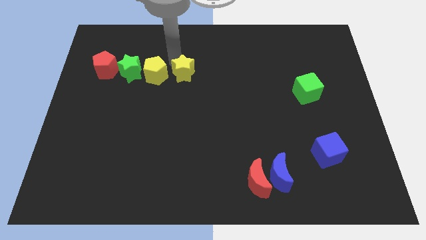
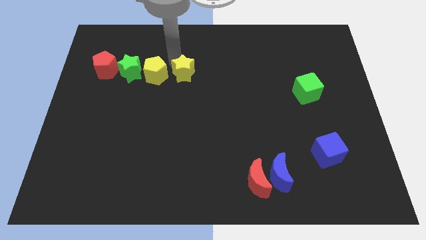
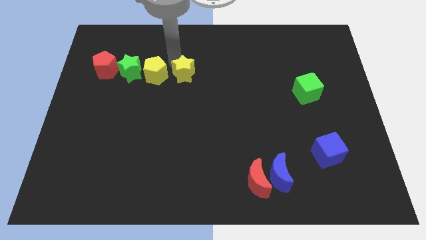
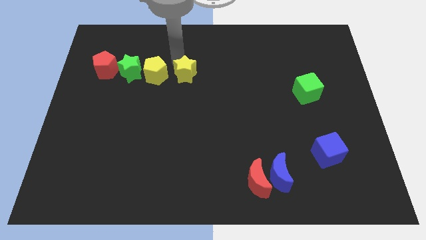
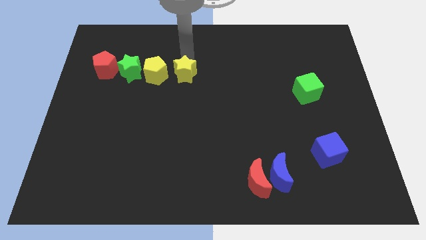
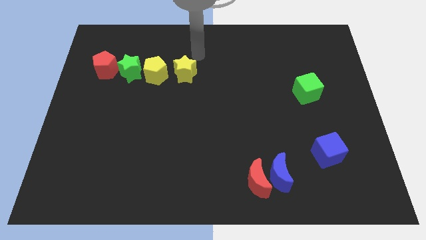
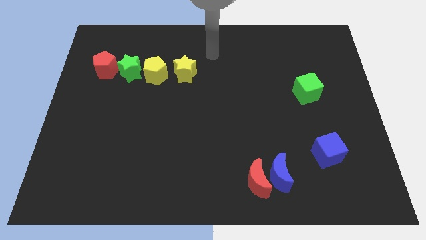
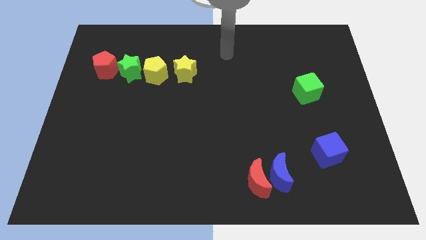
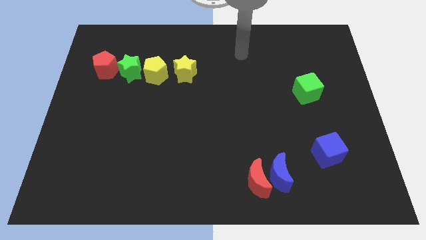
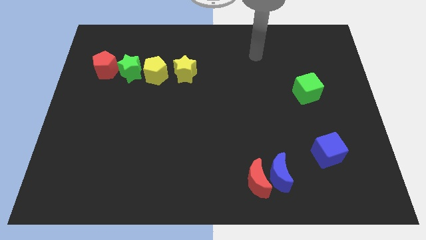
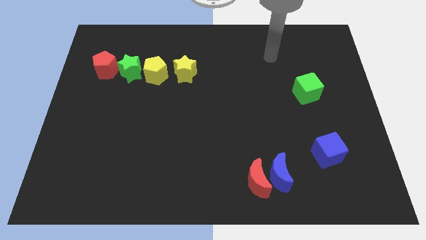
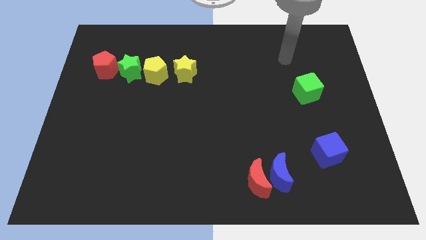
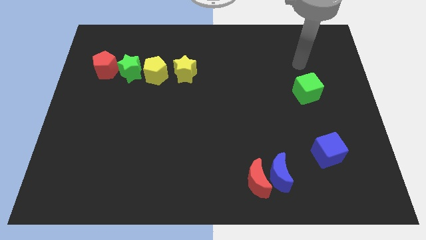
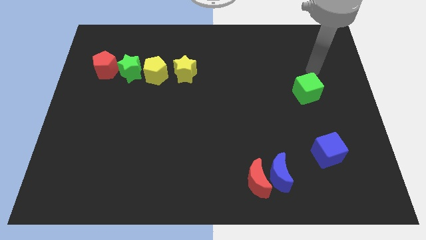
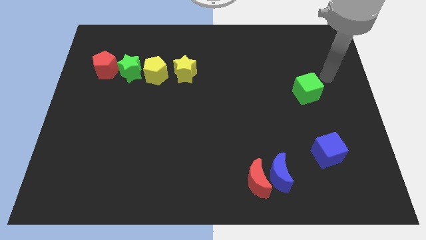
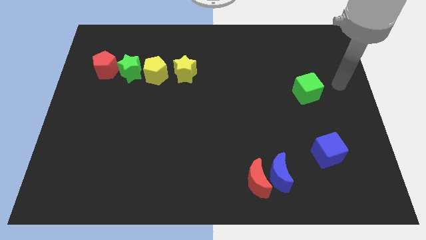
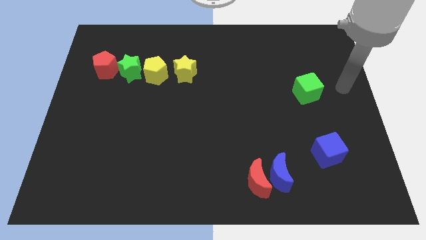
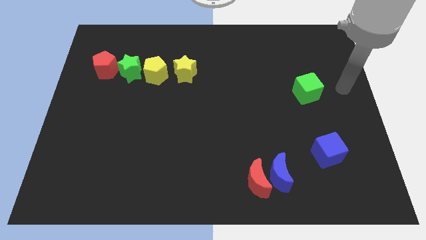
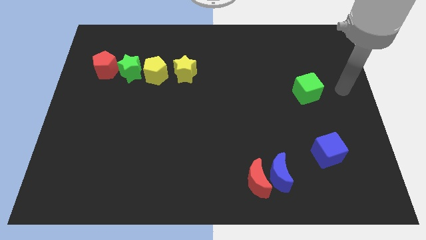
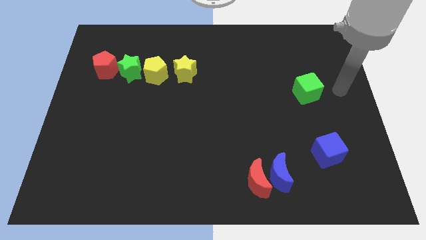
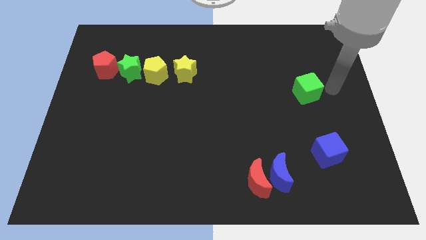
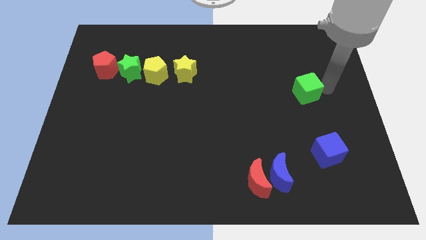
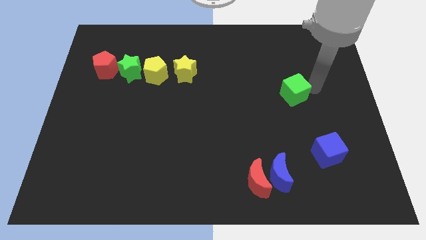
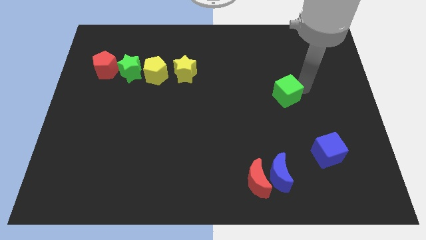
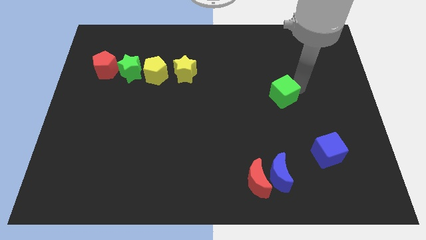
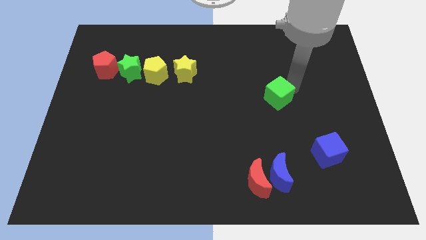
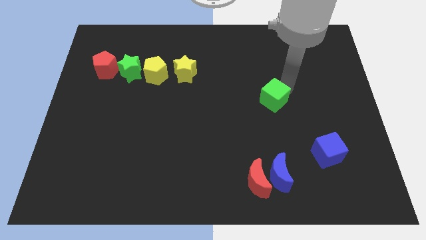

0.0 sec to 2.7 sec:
push green cube above blue crescent

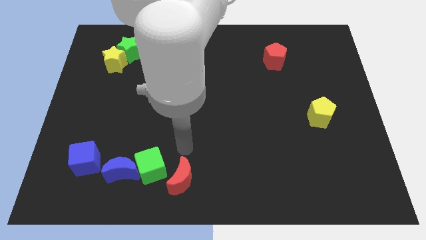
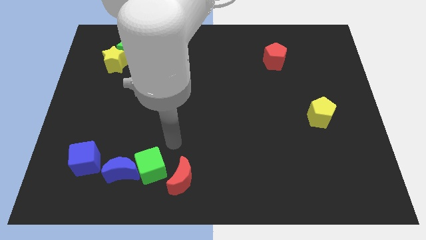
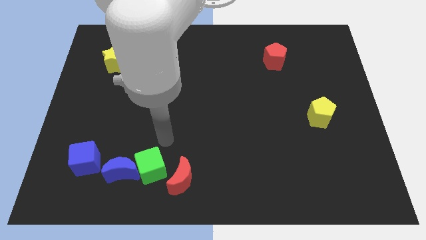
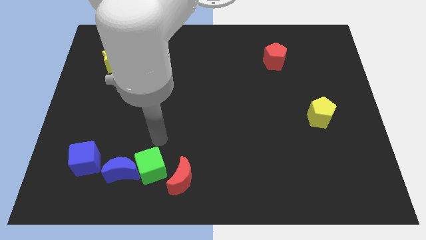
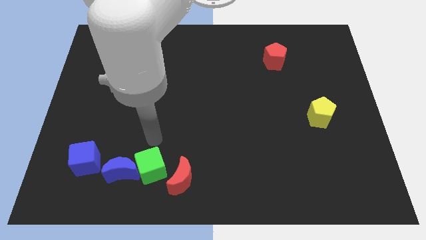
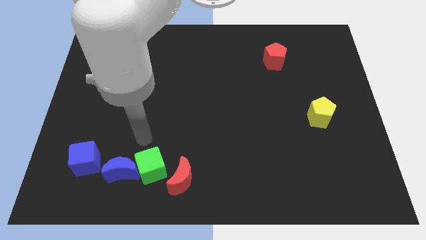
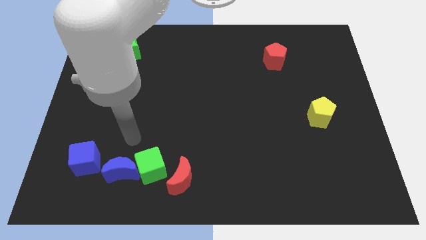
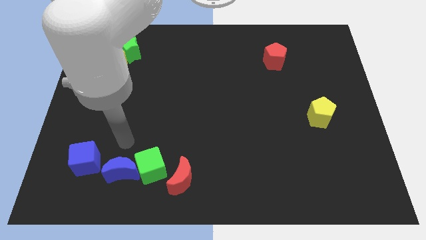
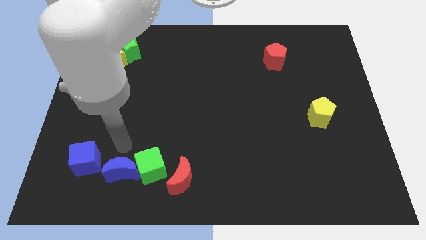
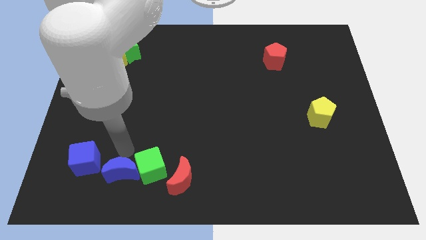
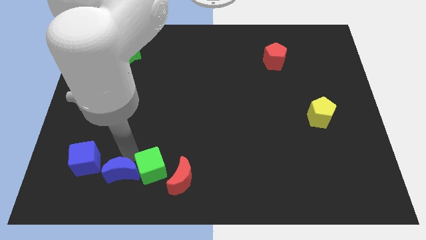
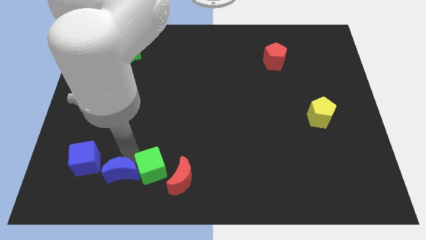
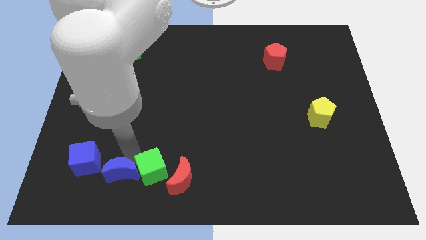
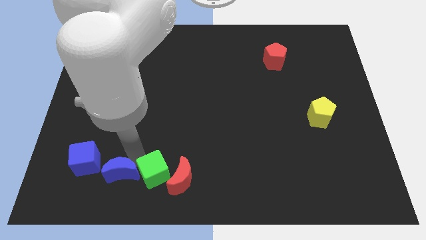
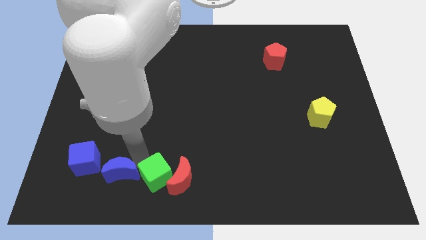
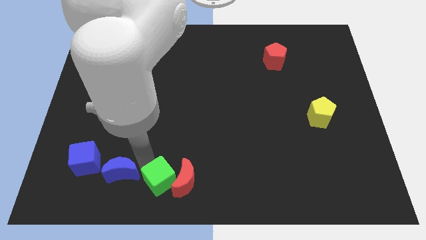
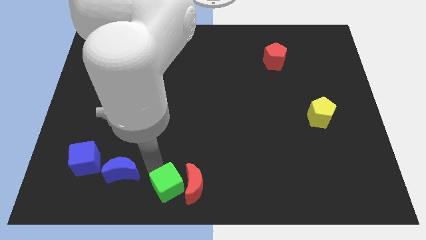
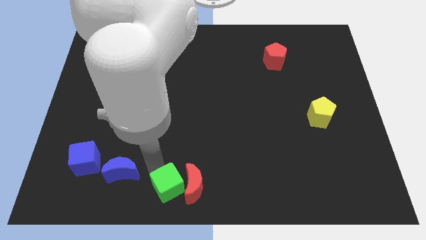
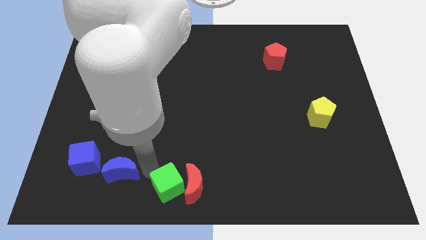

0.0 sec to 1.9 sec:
push the green cube into the red moon

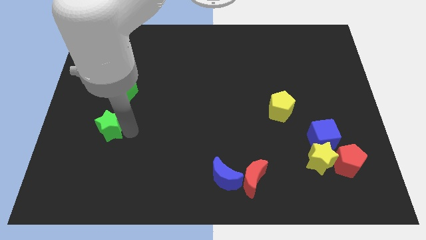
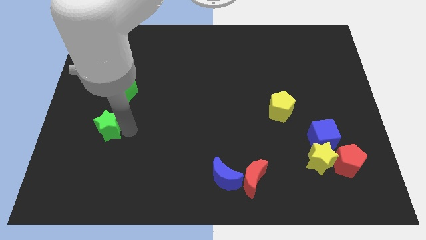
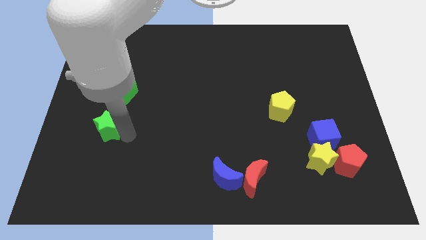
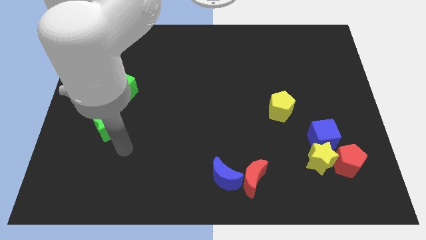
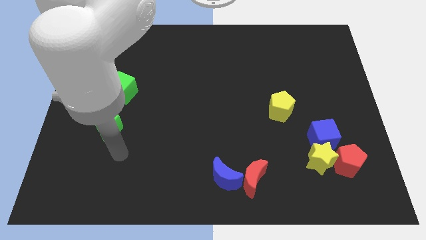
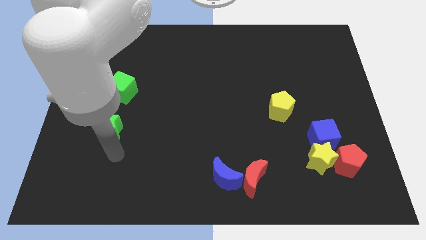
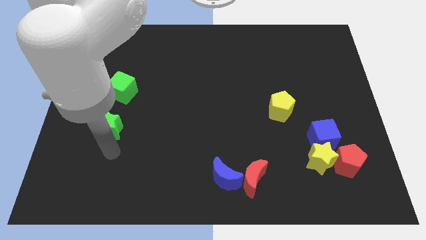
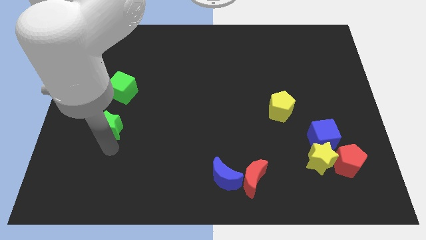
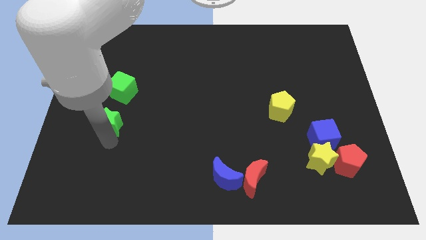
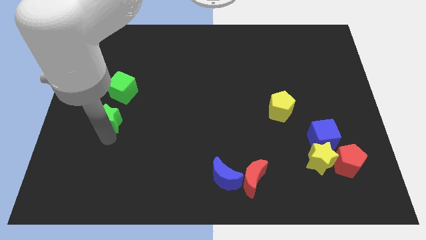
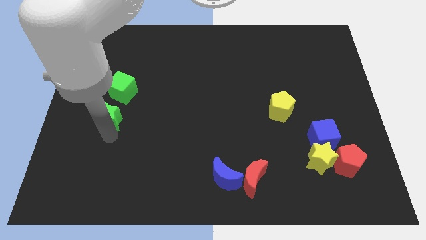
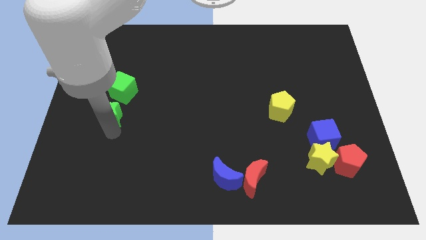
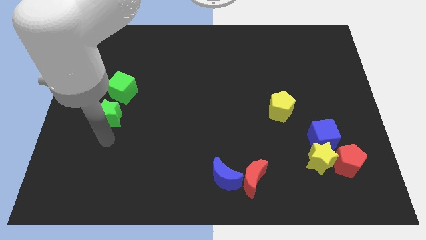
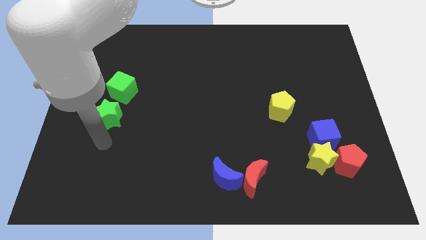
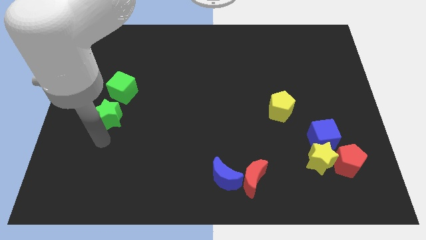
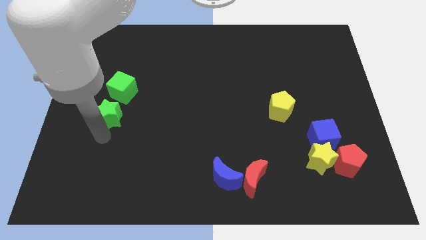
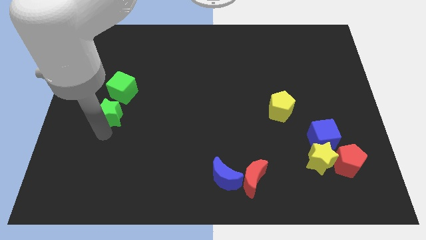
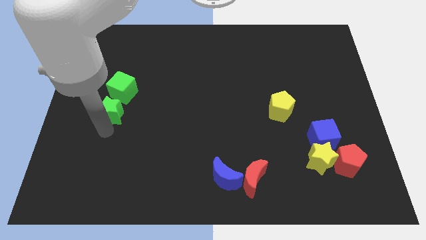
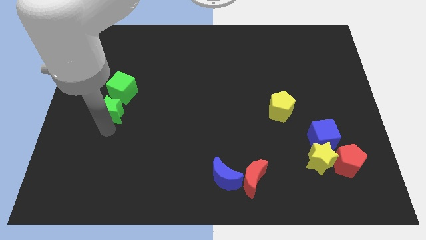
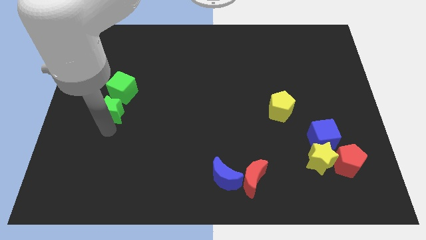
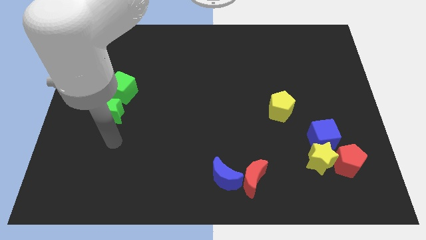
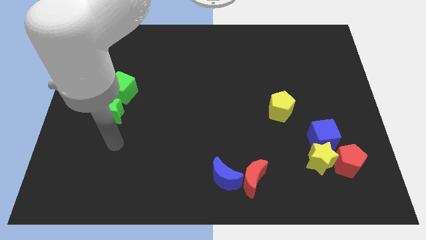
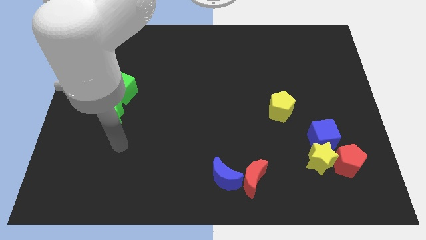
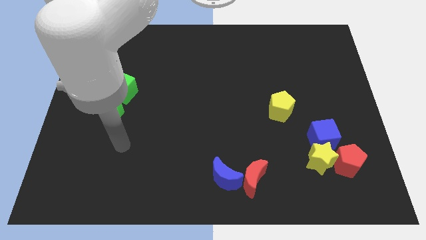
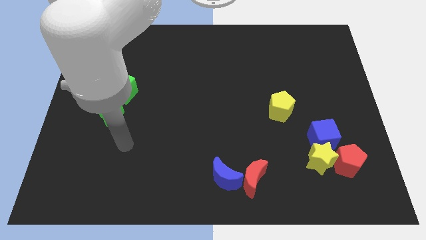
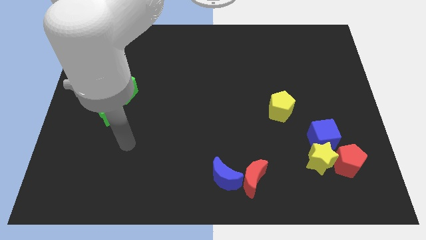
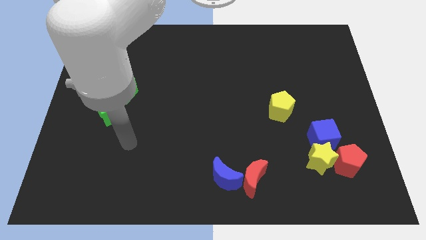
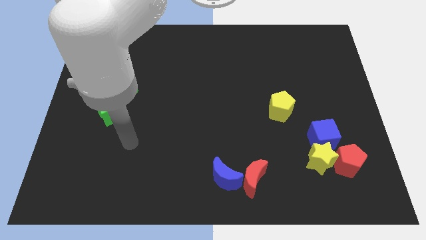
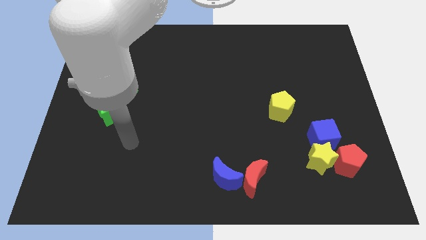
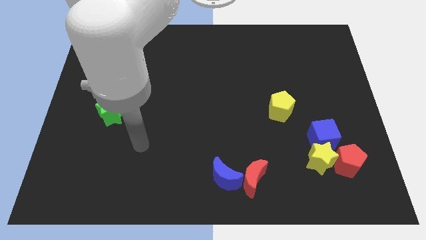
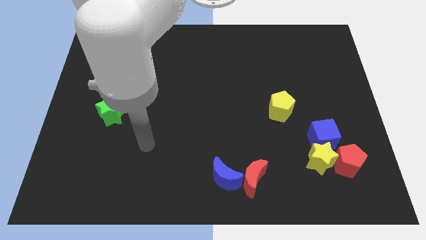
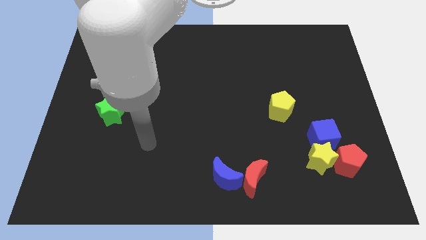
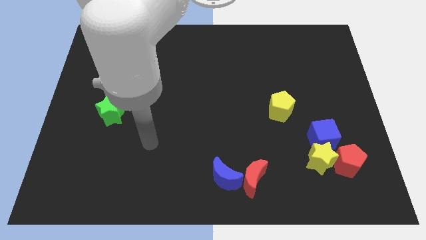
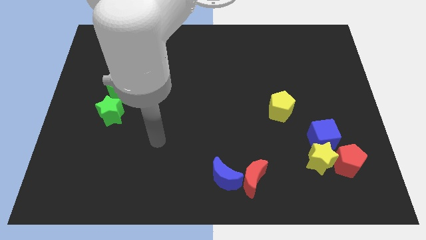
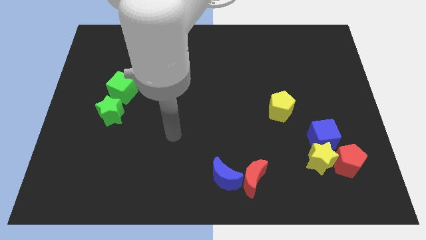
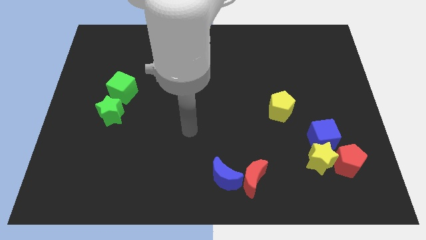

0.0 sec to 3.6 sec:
move the green star close to the green cube

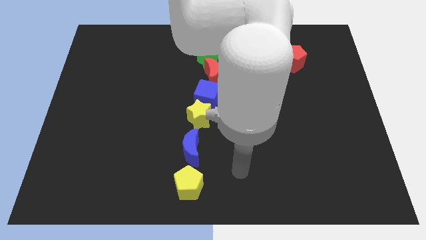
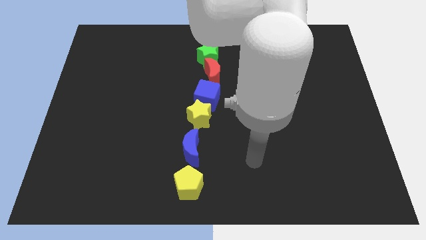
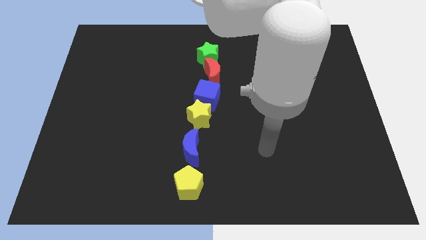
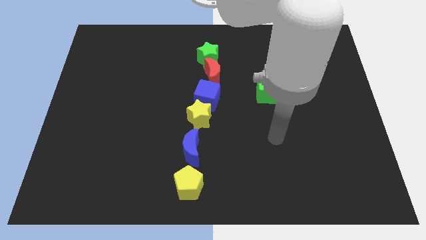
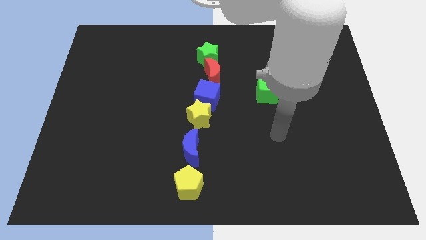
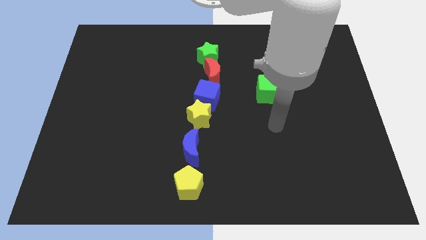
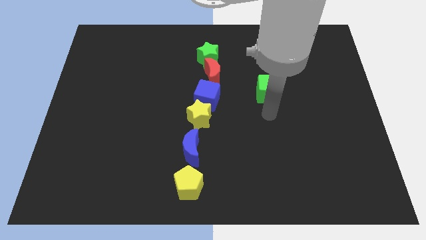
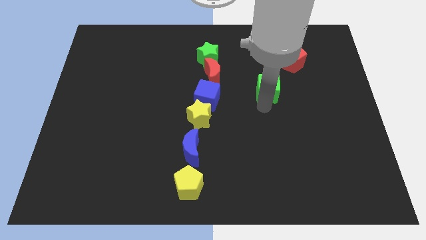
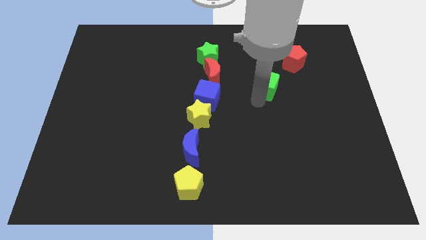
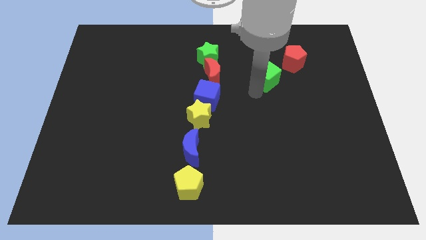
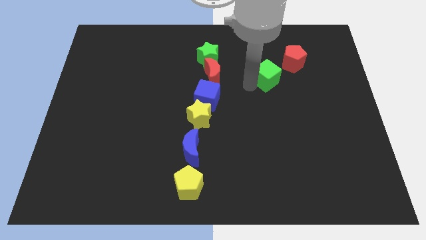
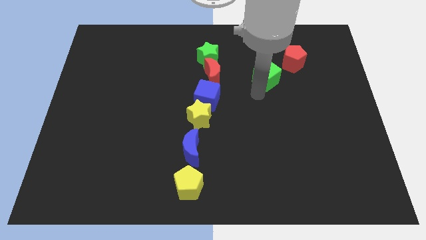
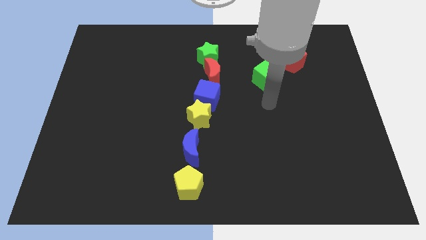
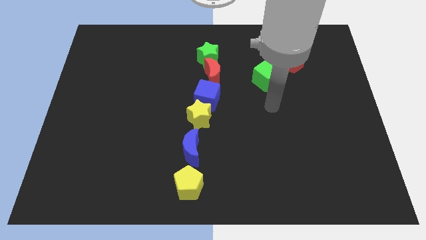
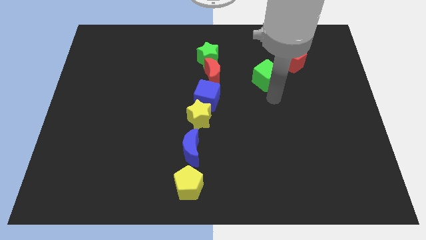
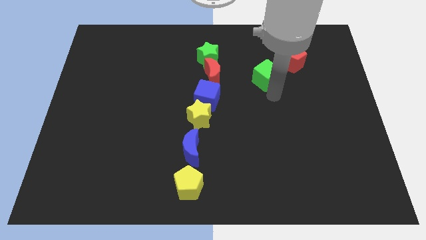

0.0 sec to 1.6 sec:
push the green cube towards the red pentagon
